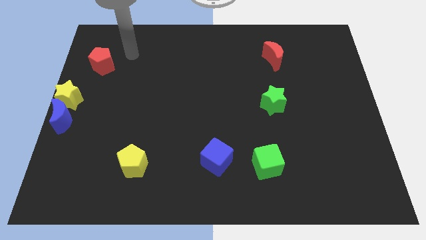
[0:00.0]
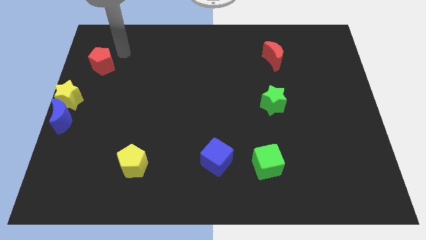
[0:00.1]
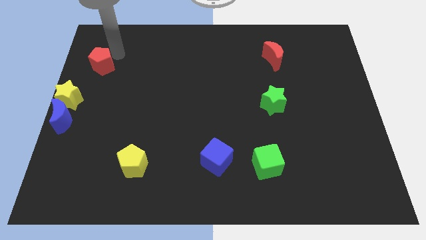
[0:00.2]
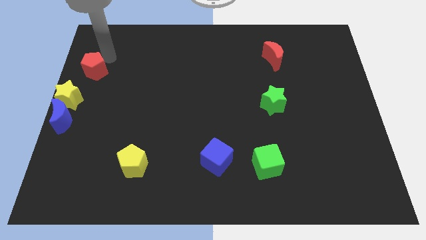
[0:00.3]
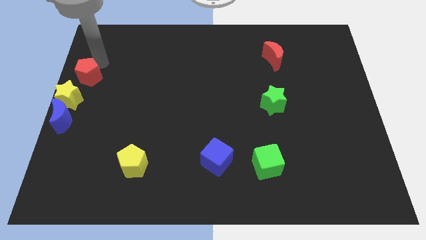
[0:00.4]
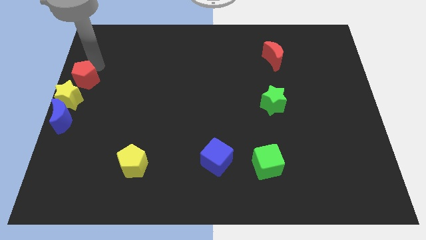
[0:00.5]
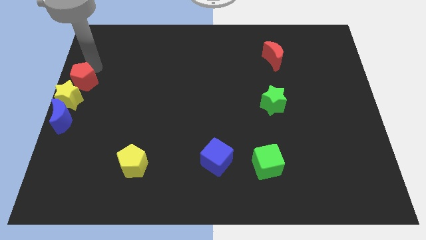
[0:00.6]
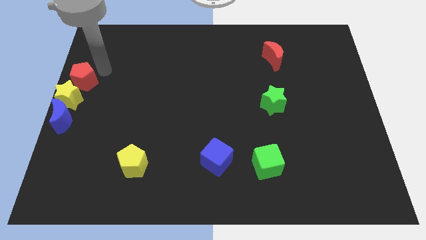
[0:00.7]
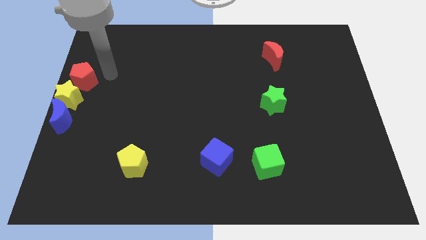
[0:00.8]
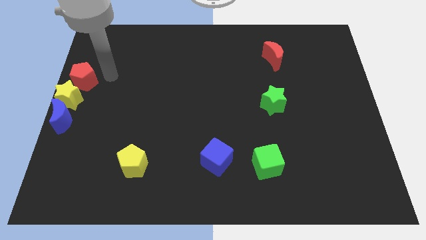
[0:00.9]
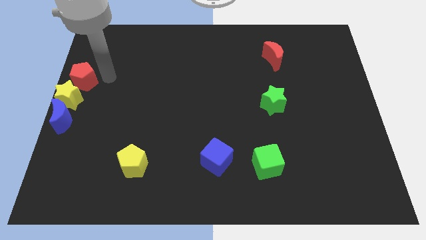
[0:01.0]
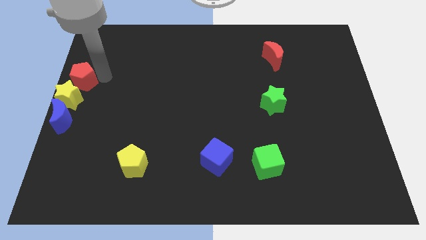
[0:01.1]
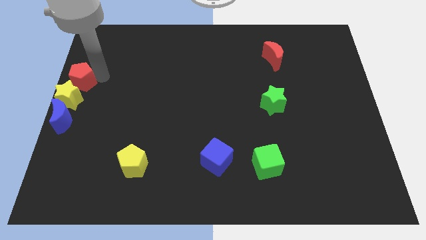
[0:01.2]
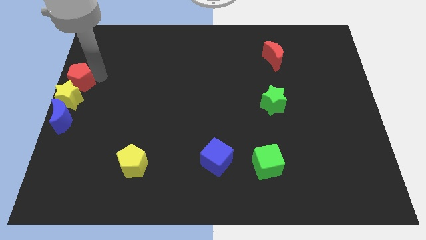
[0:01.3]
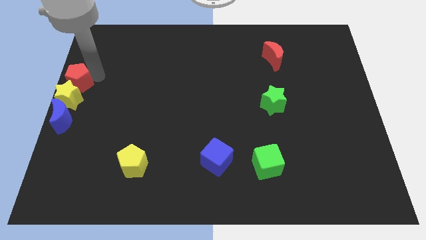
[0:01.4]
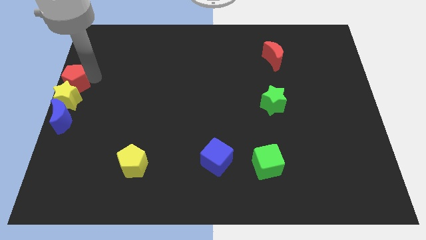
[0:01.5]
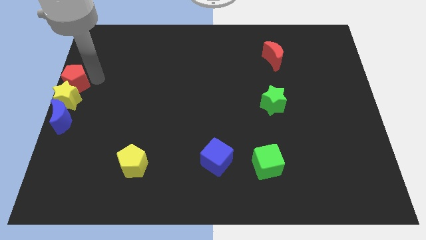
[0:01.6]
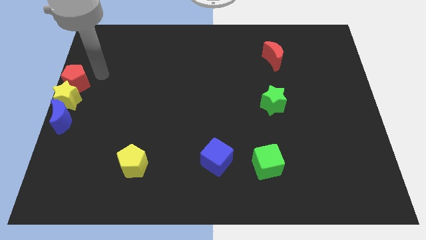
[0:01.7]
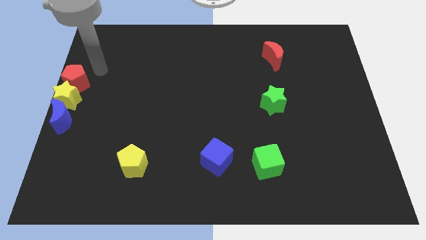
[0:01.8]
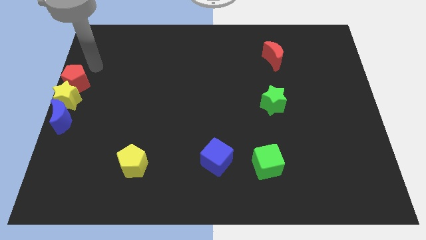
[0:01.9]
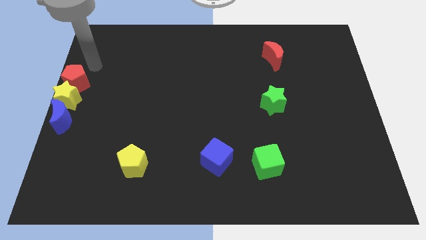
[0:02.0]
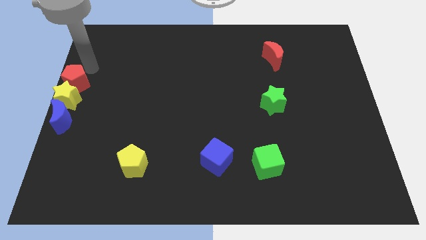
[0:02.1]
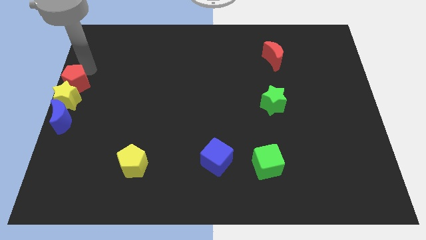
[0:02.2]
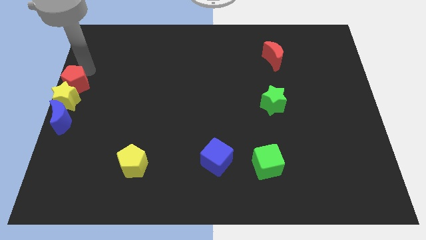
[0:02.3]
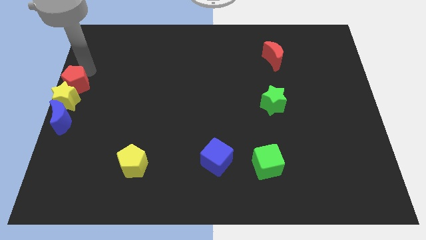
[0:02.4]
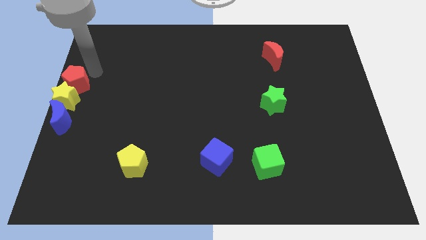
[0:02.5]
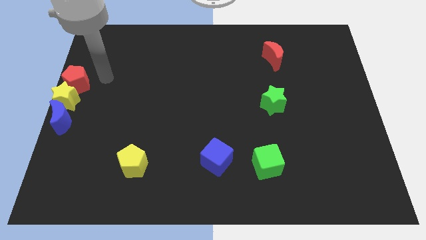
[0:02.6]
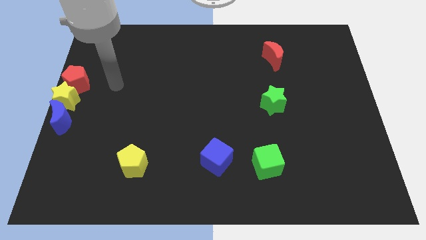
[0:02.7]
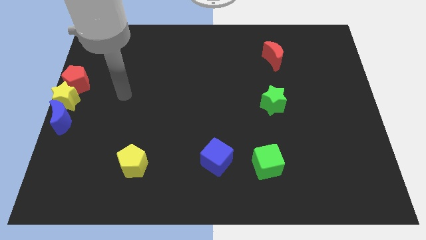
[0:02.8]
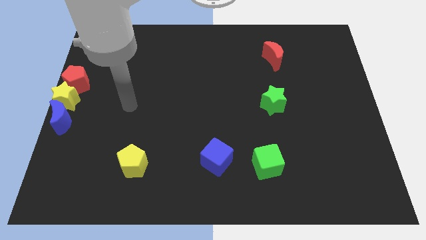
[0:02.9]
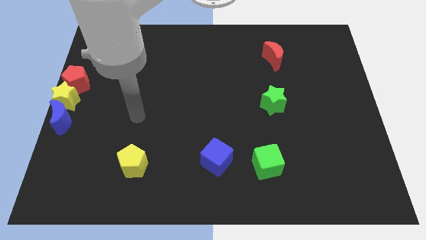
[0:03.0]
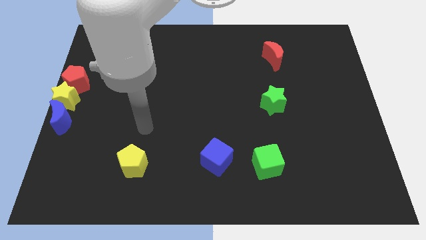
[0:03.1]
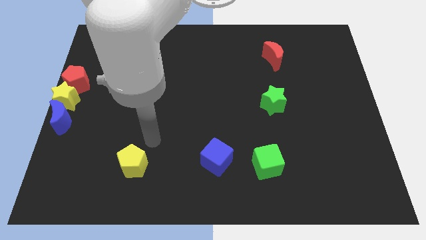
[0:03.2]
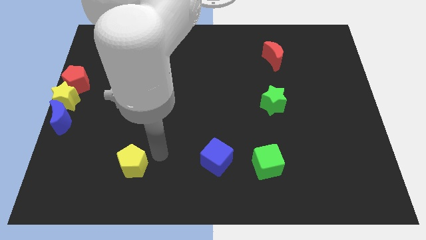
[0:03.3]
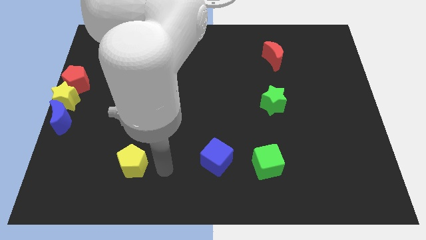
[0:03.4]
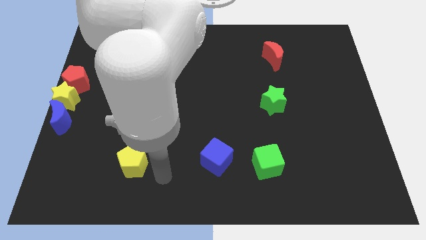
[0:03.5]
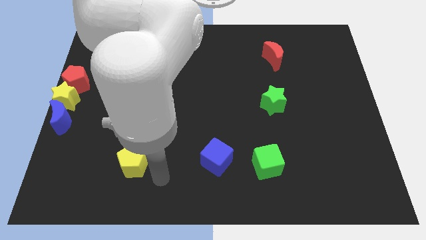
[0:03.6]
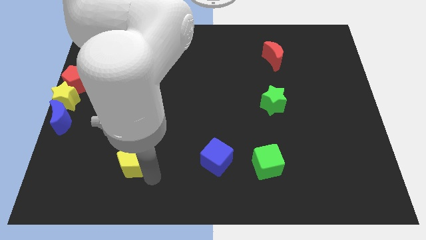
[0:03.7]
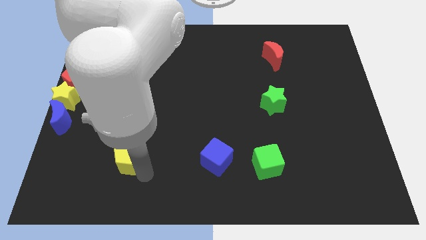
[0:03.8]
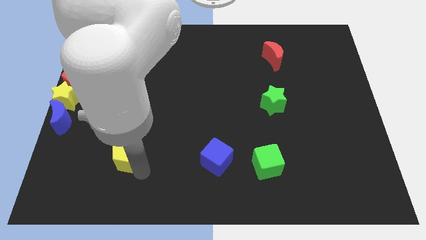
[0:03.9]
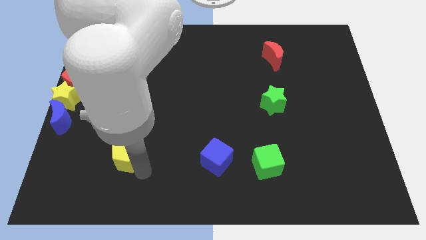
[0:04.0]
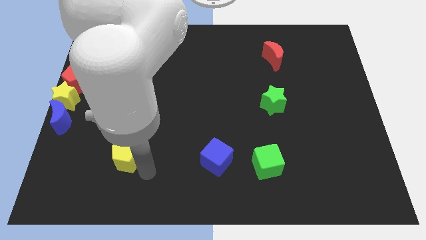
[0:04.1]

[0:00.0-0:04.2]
place the red pentagon above the yellow star

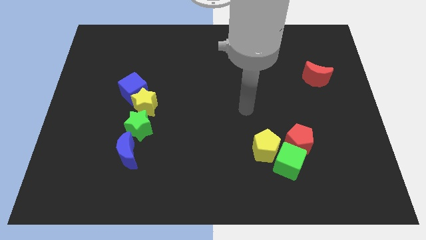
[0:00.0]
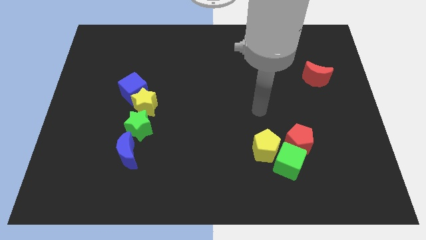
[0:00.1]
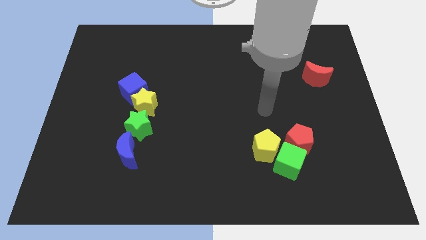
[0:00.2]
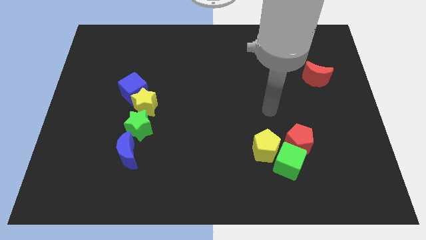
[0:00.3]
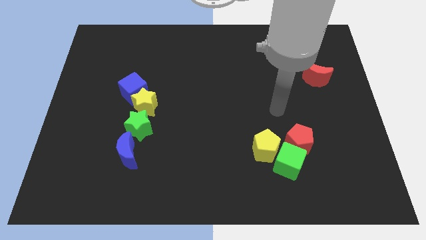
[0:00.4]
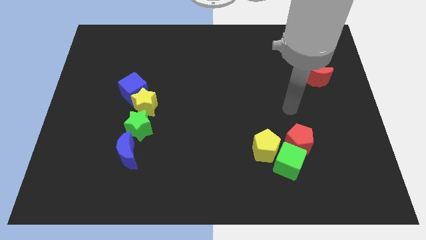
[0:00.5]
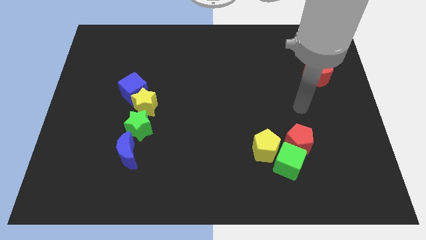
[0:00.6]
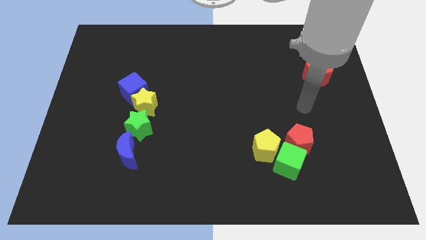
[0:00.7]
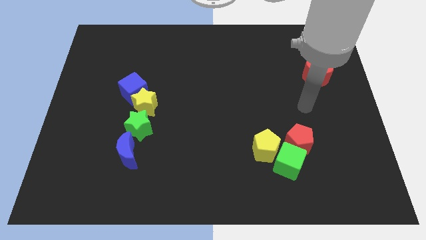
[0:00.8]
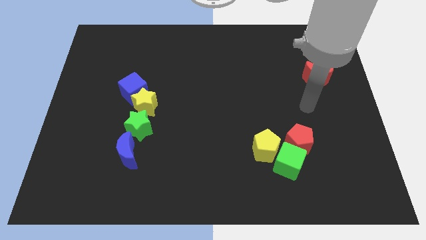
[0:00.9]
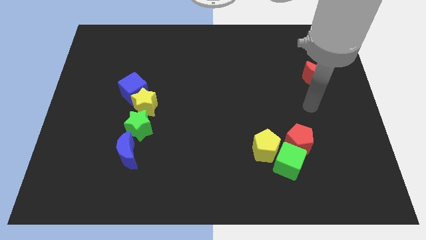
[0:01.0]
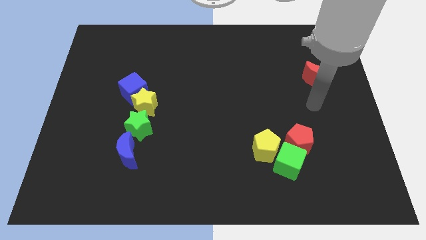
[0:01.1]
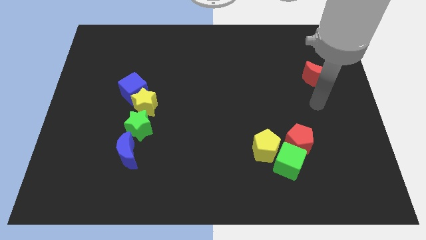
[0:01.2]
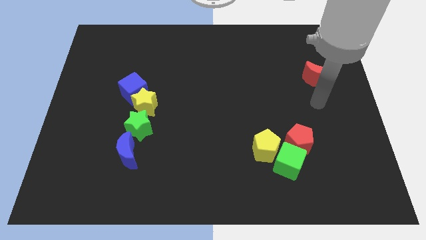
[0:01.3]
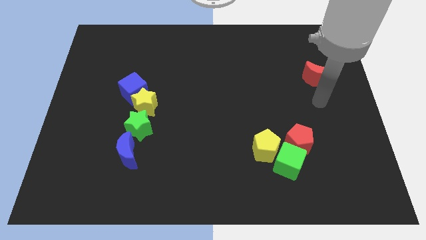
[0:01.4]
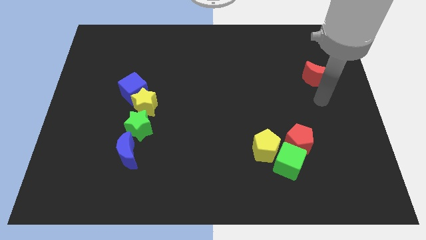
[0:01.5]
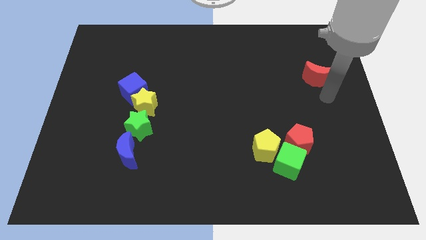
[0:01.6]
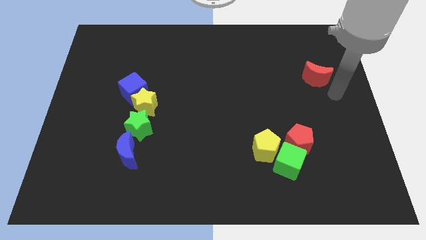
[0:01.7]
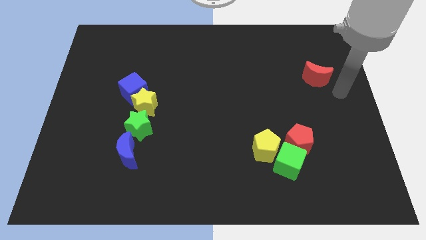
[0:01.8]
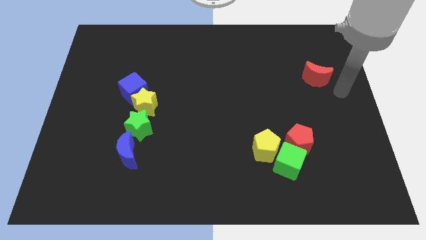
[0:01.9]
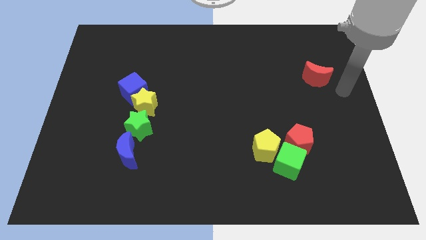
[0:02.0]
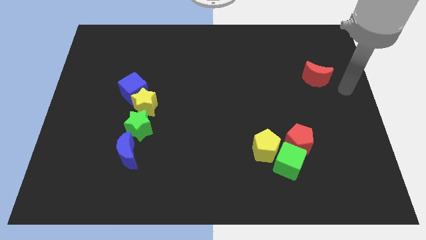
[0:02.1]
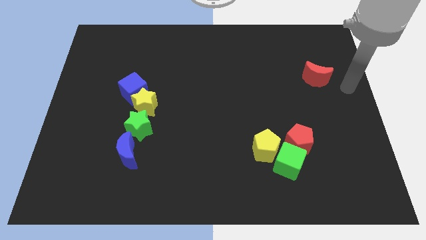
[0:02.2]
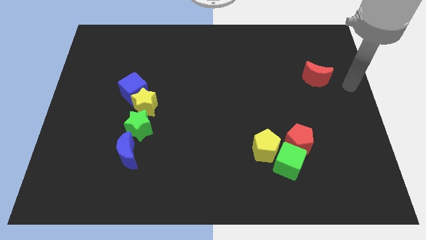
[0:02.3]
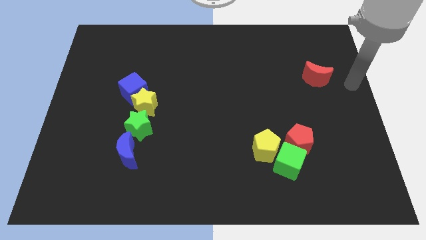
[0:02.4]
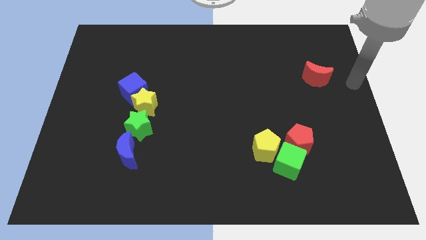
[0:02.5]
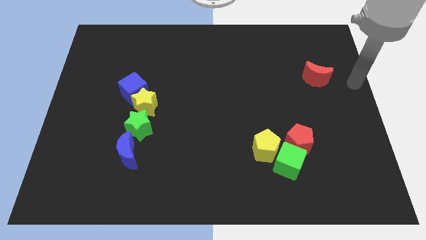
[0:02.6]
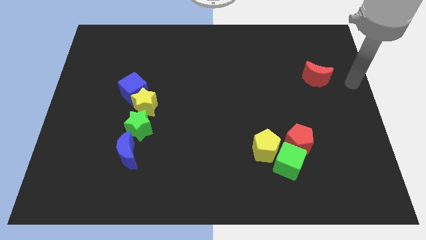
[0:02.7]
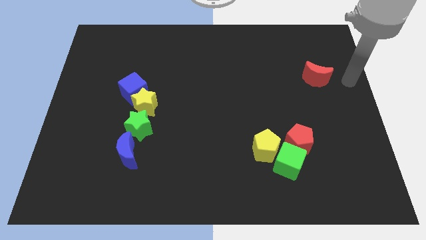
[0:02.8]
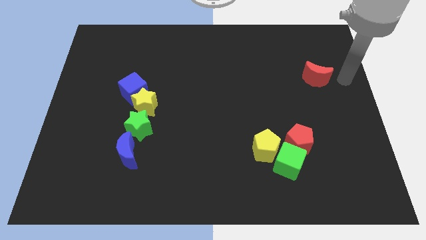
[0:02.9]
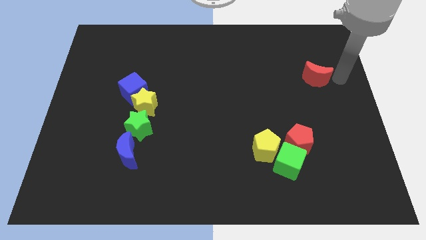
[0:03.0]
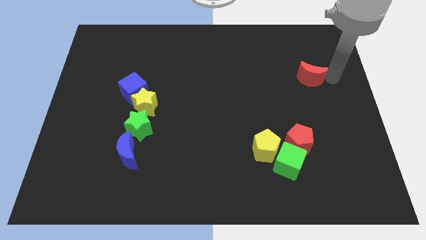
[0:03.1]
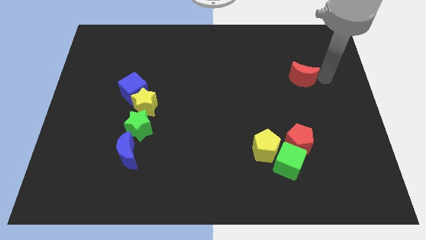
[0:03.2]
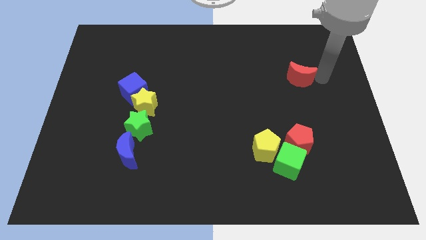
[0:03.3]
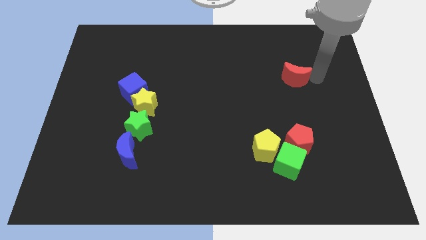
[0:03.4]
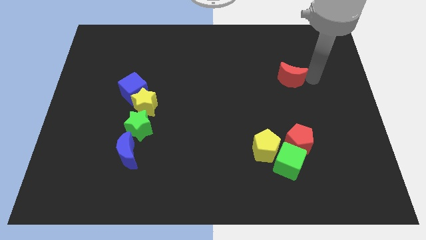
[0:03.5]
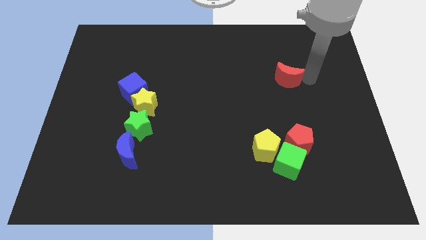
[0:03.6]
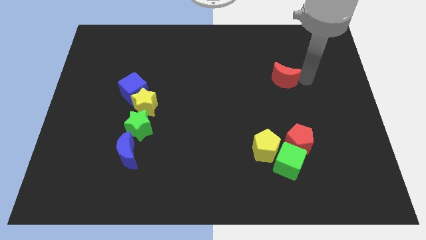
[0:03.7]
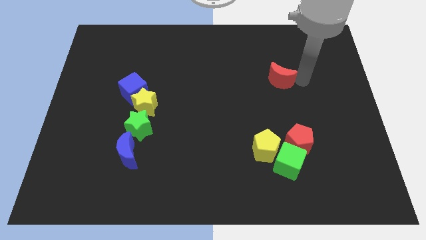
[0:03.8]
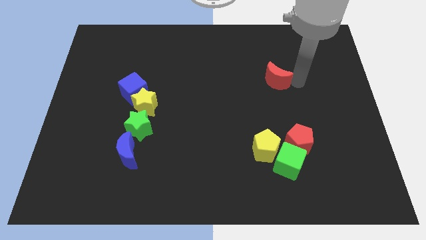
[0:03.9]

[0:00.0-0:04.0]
push the red moon slightly to the left of the board

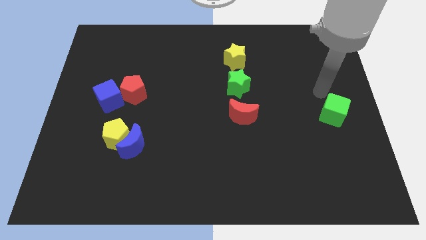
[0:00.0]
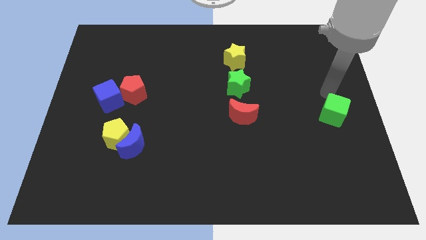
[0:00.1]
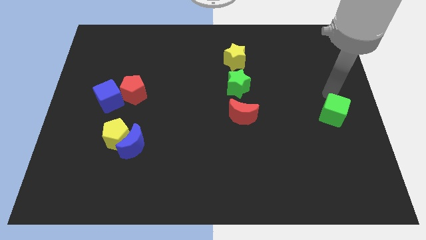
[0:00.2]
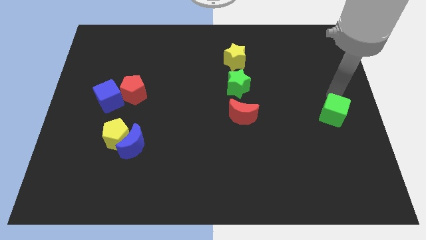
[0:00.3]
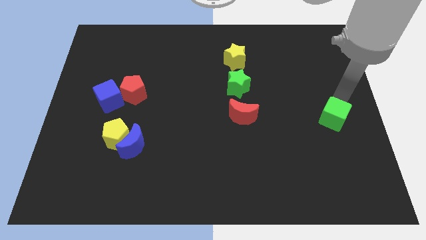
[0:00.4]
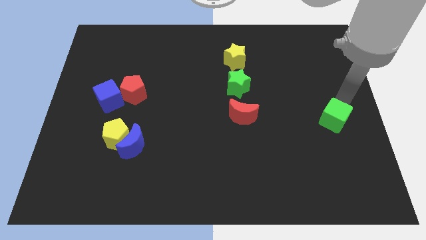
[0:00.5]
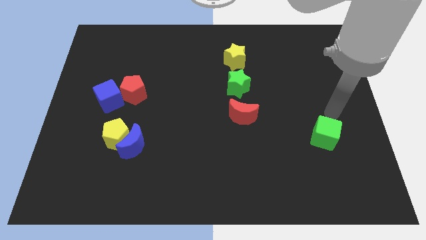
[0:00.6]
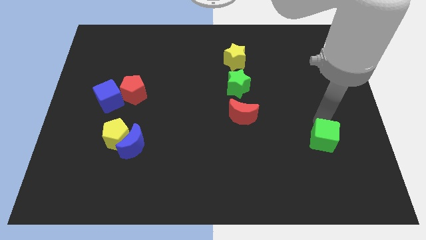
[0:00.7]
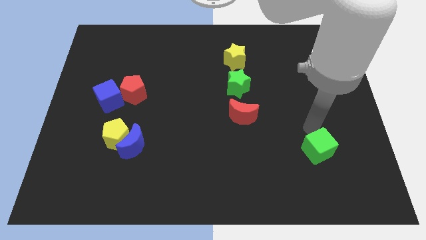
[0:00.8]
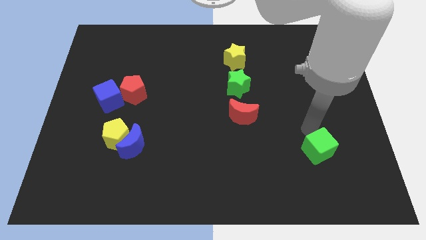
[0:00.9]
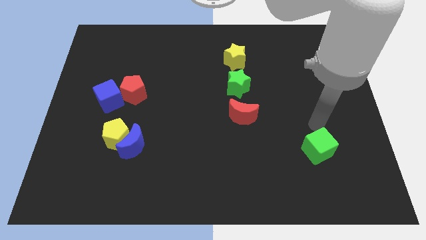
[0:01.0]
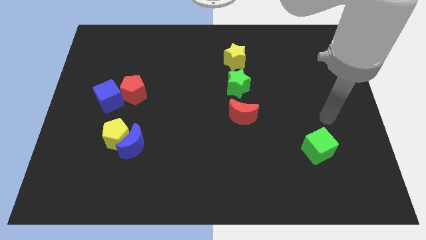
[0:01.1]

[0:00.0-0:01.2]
push the green cube downwards
